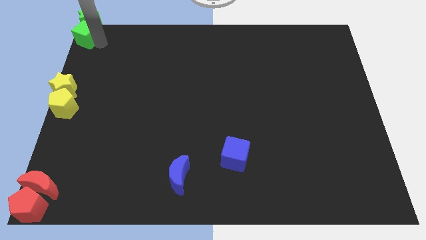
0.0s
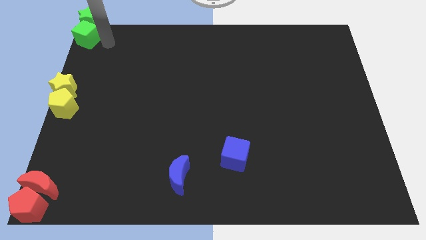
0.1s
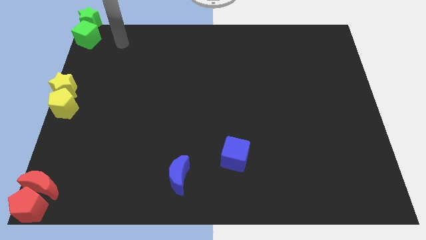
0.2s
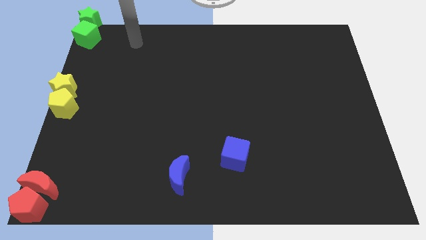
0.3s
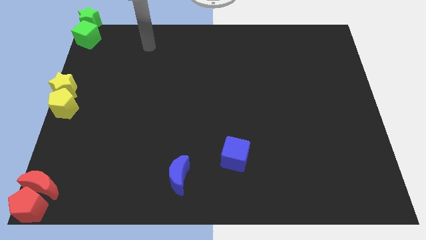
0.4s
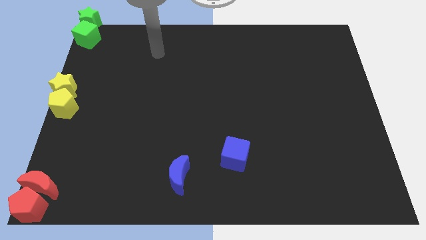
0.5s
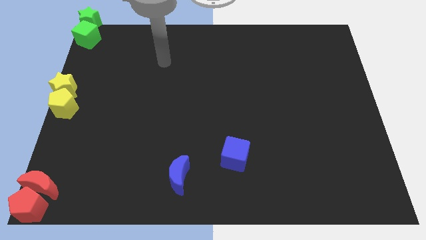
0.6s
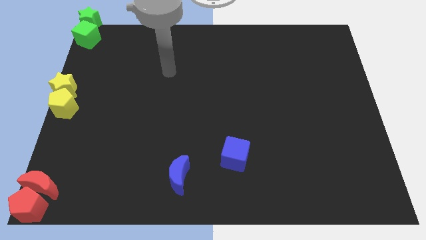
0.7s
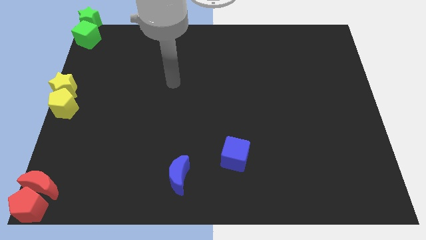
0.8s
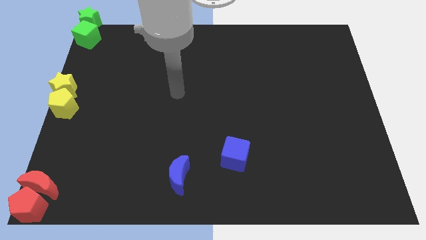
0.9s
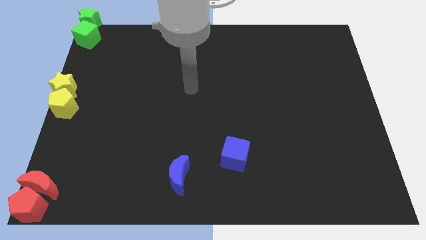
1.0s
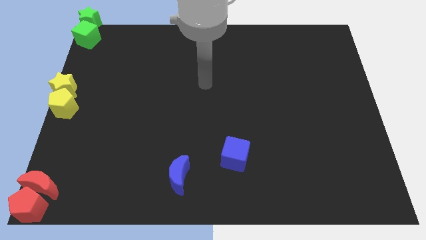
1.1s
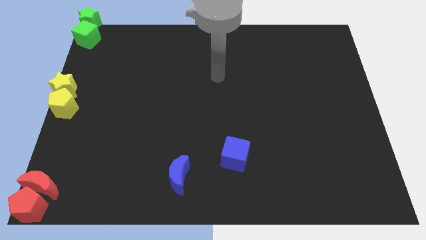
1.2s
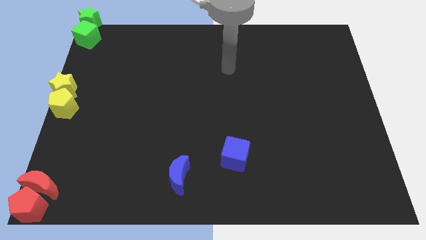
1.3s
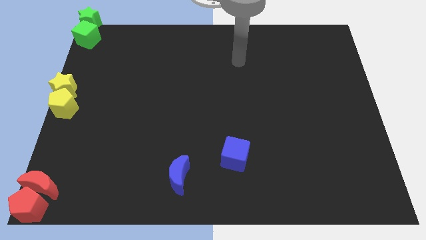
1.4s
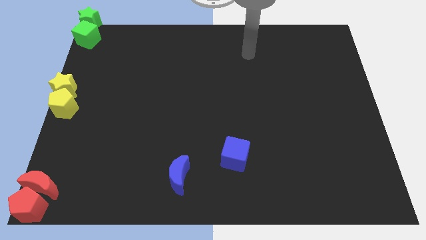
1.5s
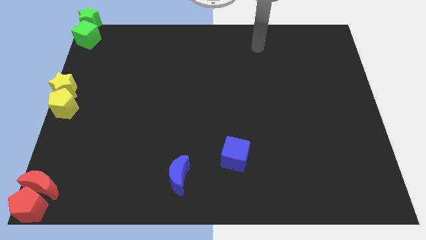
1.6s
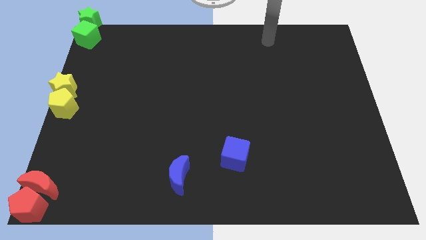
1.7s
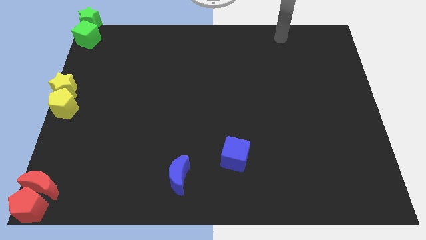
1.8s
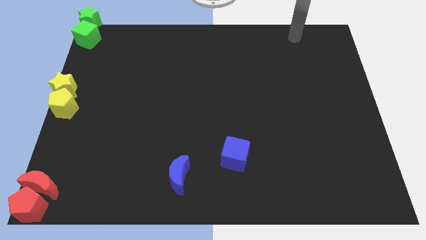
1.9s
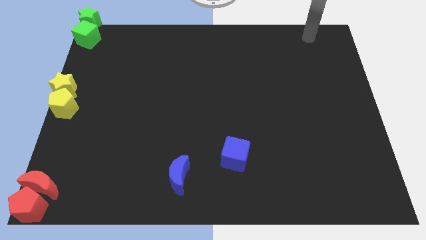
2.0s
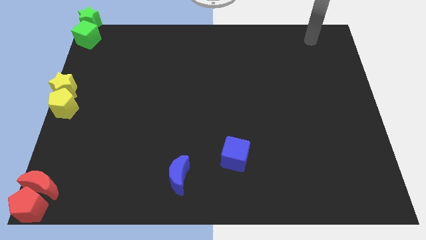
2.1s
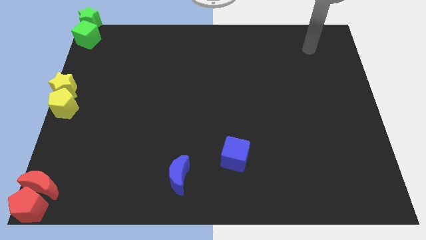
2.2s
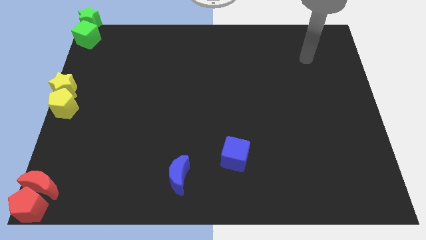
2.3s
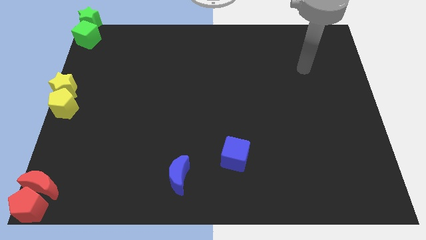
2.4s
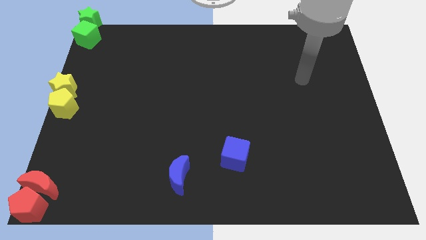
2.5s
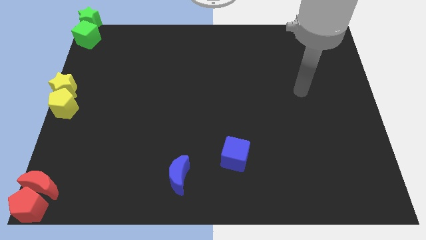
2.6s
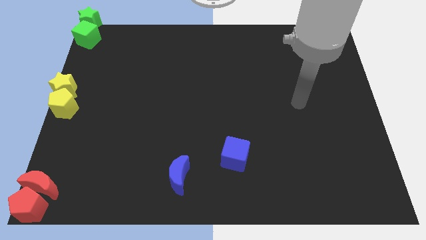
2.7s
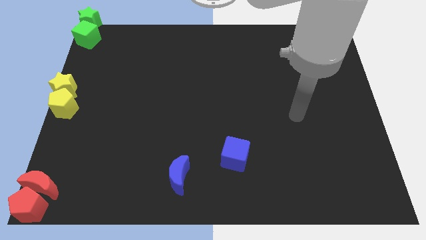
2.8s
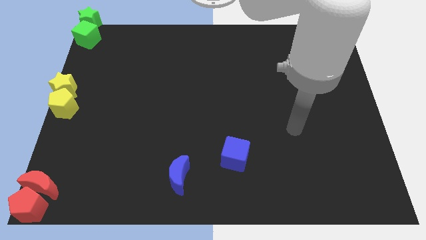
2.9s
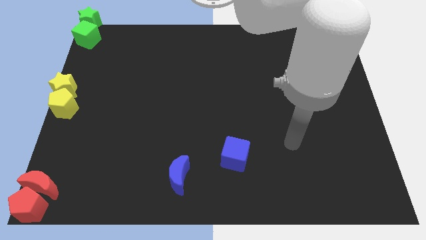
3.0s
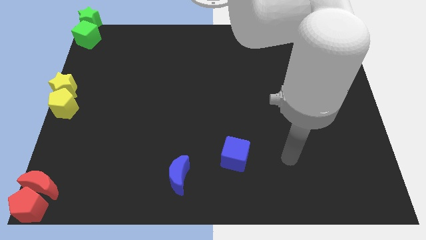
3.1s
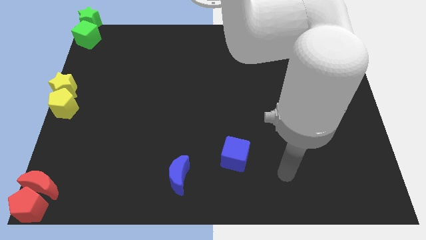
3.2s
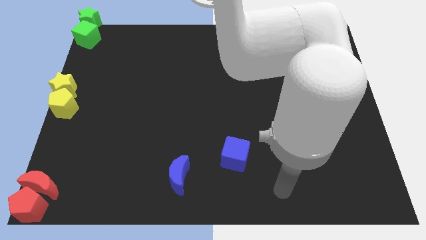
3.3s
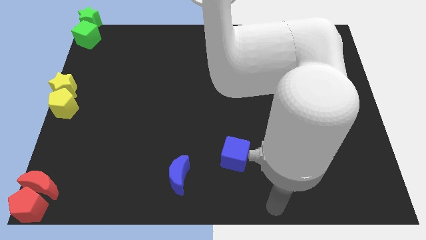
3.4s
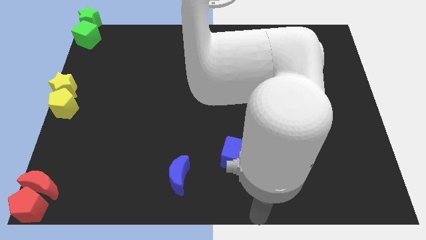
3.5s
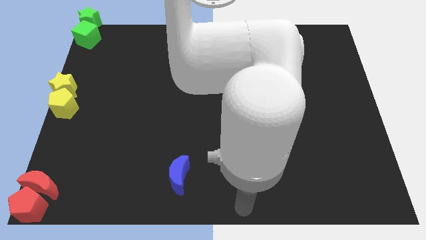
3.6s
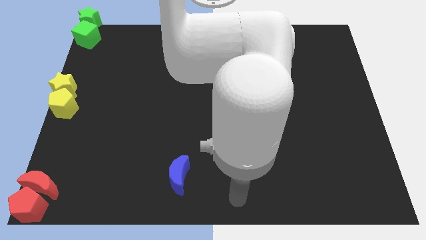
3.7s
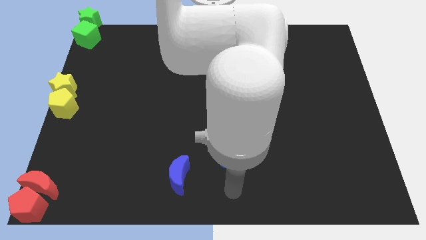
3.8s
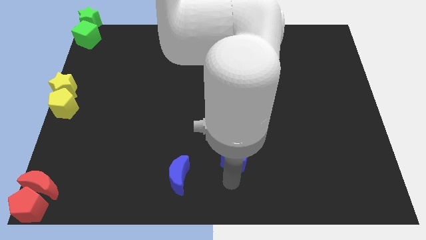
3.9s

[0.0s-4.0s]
place your arm to the bottom side of the blue cube

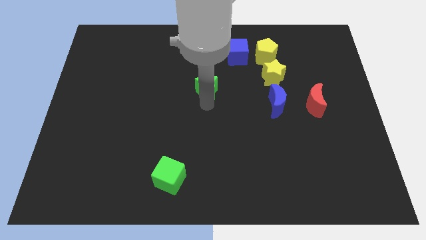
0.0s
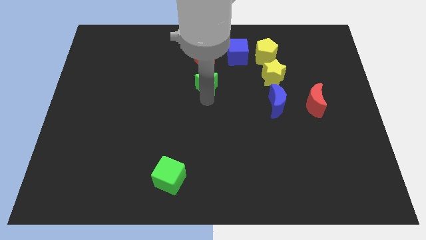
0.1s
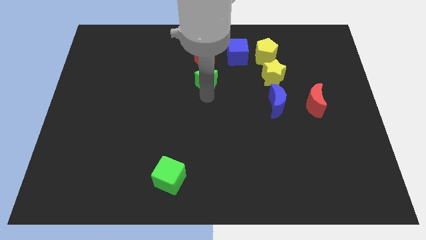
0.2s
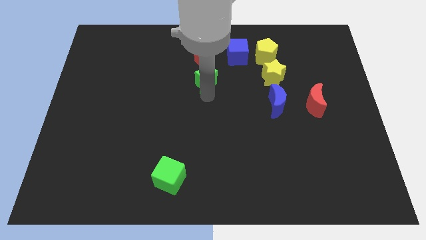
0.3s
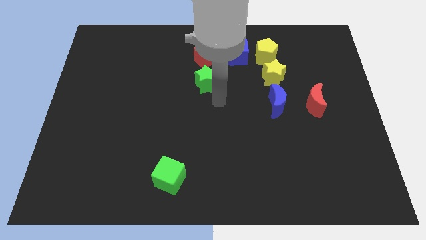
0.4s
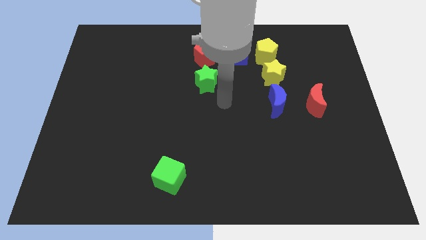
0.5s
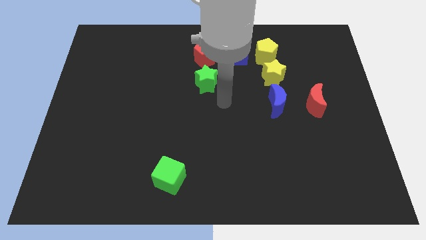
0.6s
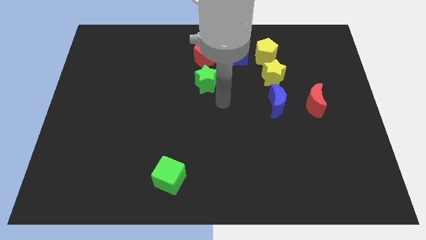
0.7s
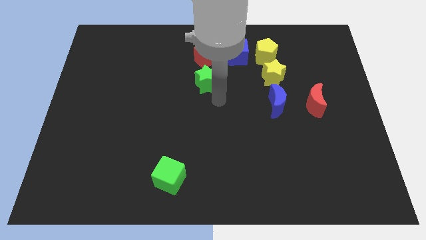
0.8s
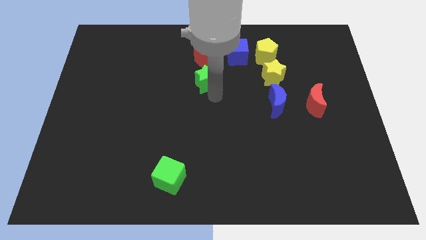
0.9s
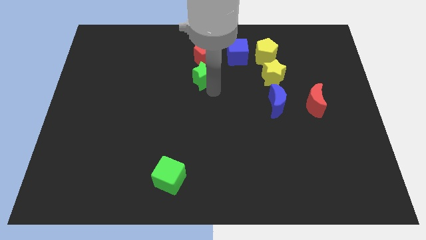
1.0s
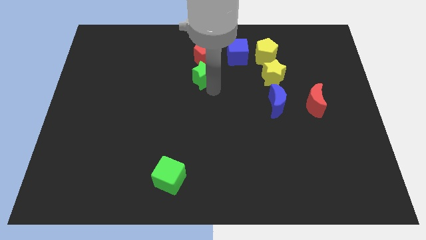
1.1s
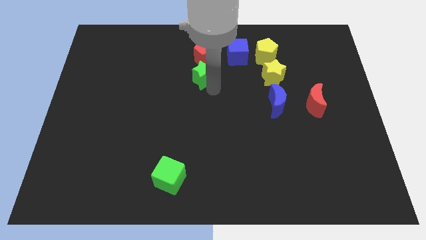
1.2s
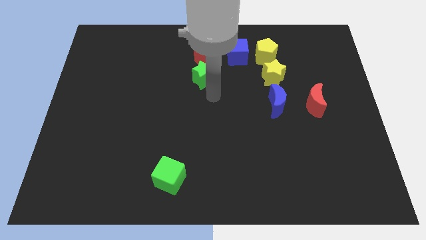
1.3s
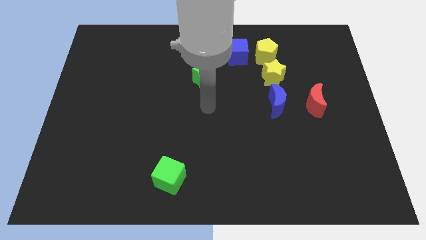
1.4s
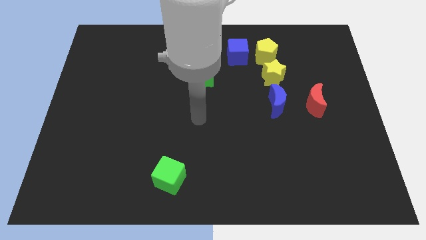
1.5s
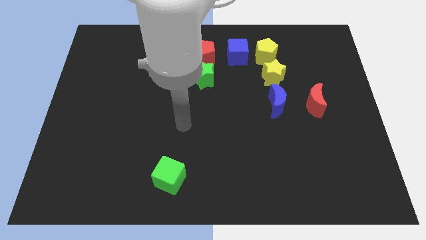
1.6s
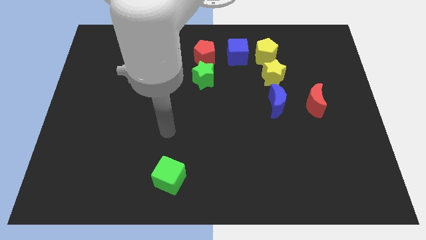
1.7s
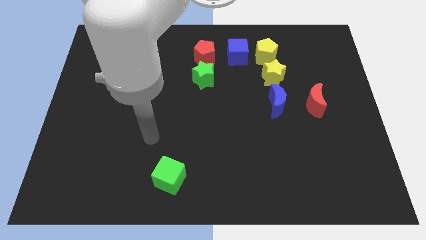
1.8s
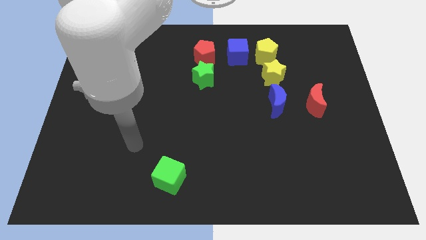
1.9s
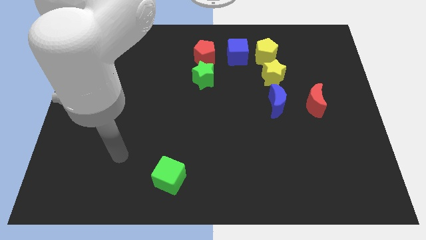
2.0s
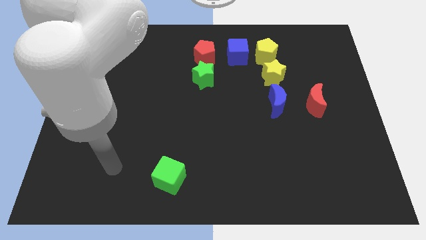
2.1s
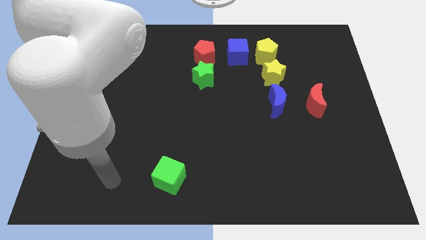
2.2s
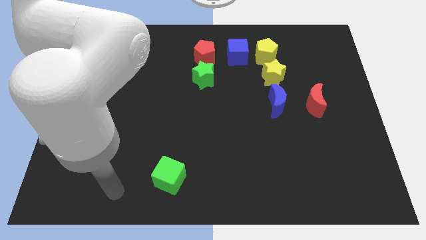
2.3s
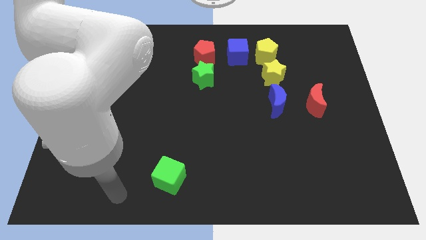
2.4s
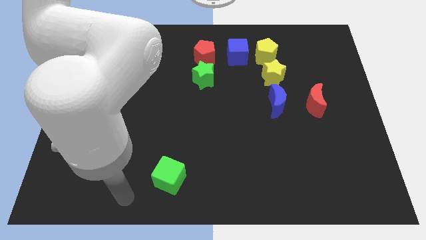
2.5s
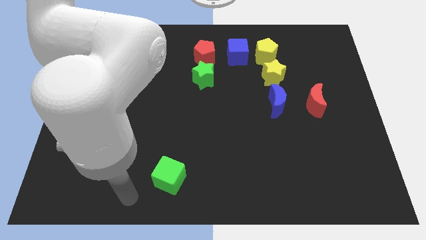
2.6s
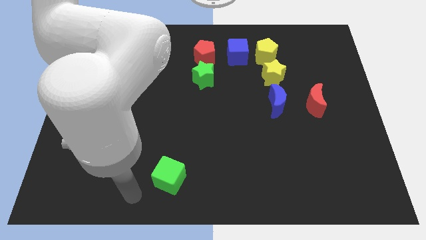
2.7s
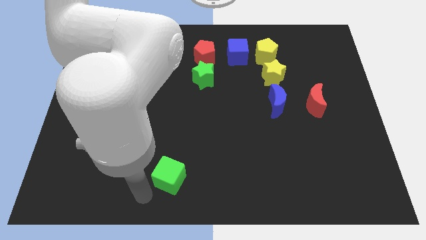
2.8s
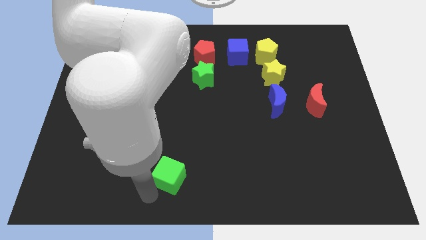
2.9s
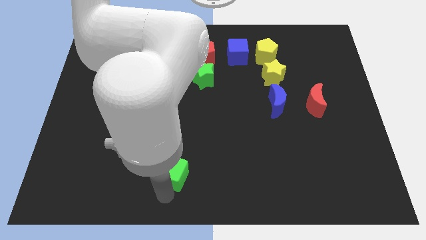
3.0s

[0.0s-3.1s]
move your arm away from the green star

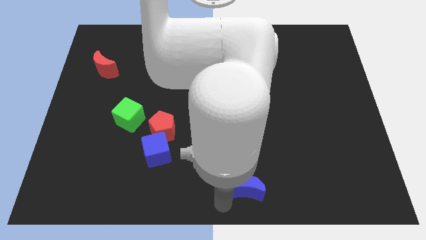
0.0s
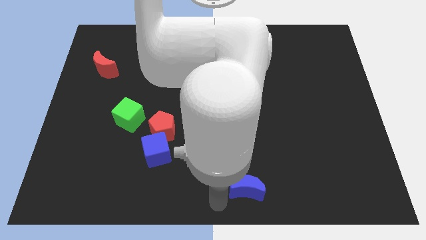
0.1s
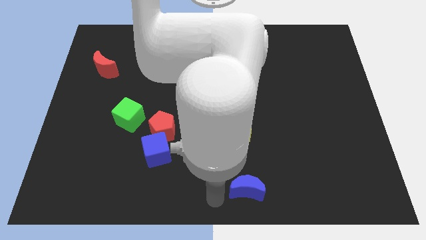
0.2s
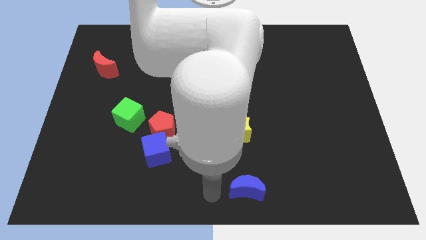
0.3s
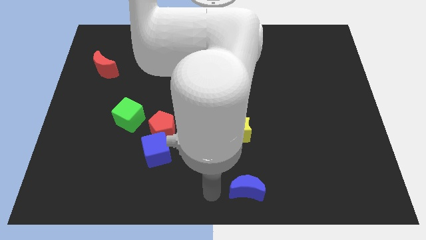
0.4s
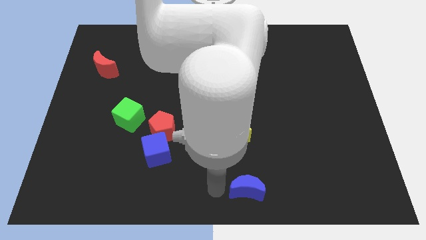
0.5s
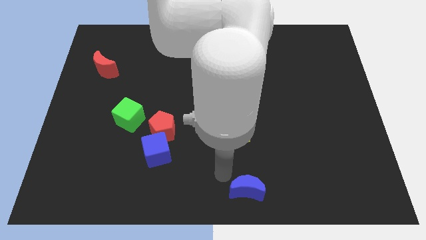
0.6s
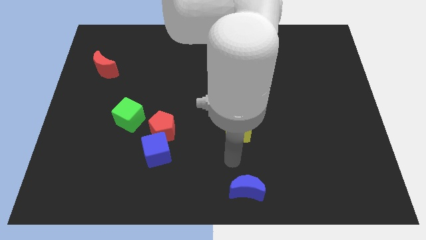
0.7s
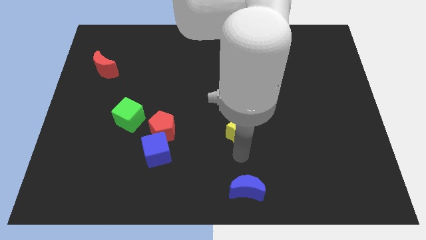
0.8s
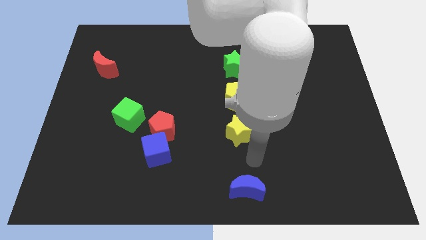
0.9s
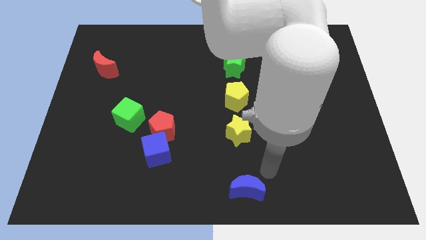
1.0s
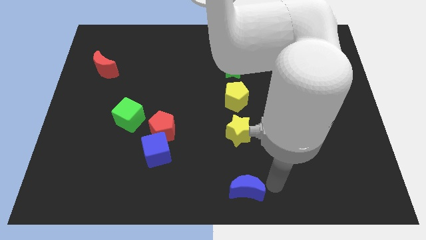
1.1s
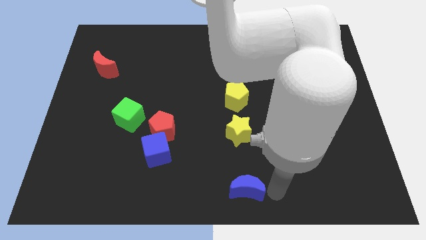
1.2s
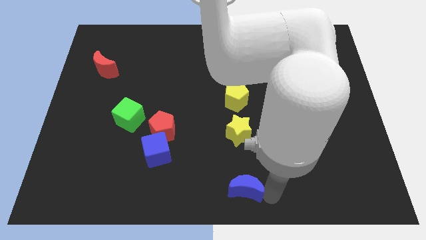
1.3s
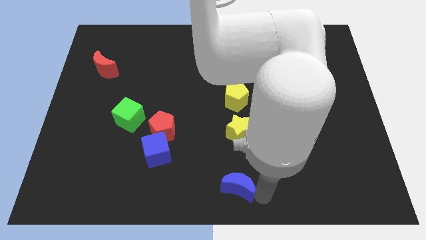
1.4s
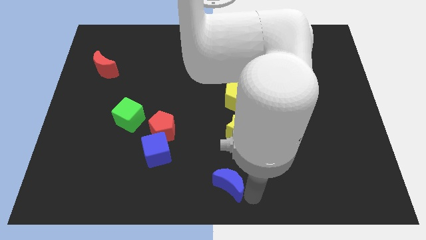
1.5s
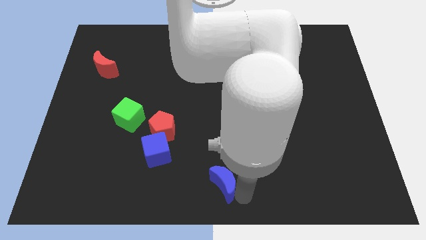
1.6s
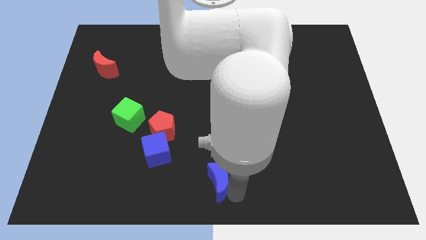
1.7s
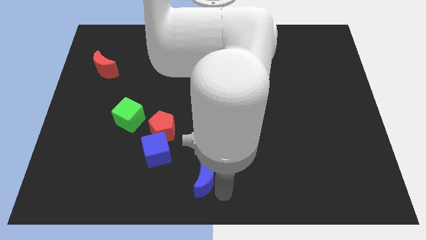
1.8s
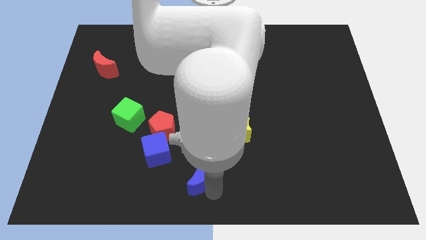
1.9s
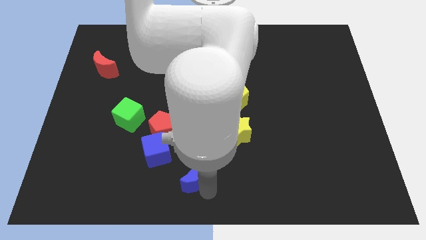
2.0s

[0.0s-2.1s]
push the blue moon diagonally to the bottom right of the blue cube
